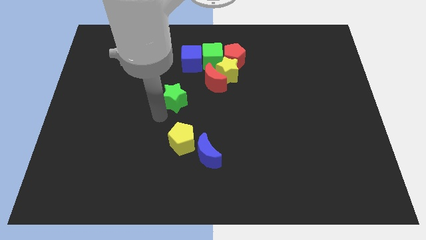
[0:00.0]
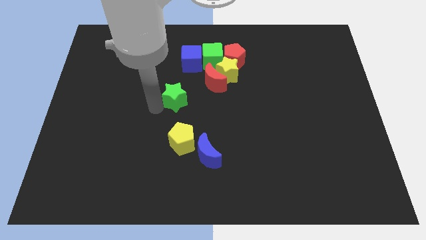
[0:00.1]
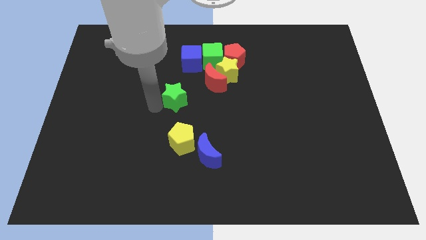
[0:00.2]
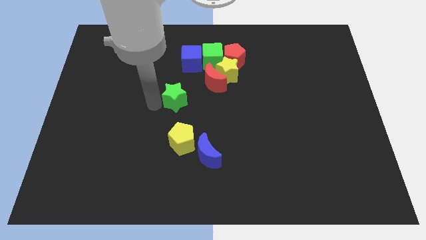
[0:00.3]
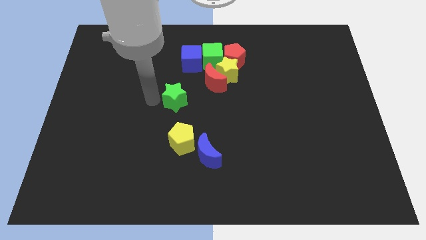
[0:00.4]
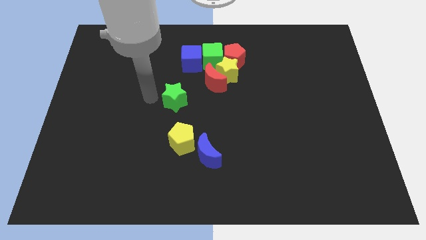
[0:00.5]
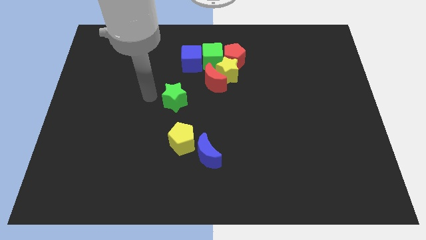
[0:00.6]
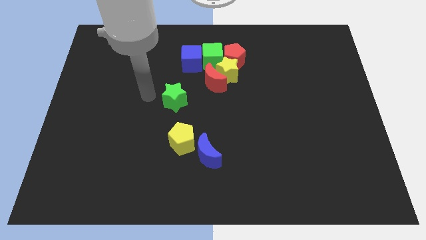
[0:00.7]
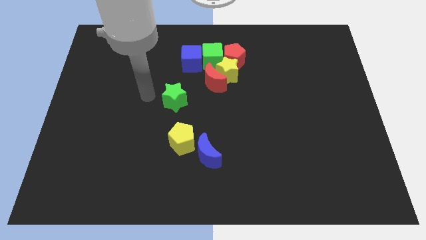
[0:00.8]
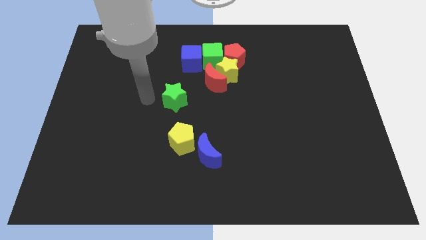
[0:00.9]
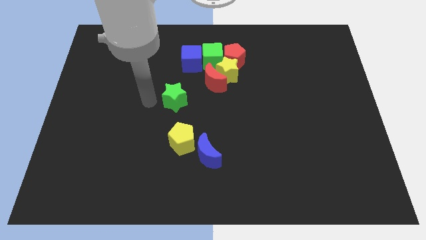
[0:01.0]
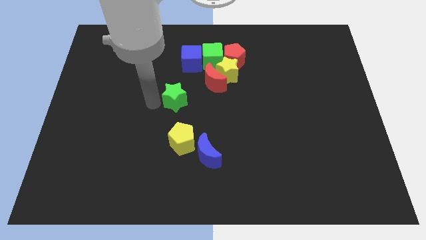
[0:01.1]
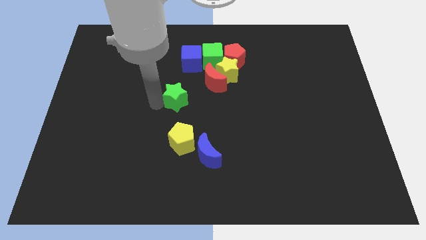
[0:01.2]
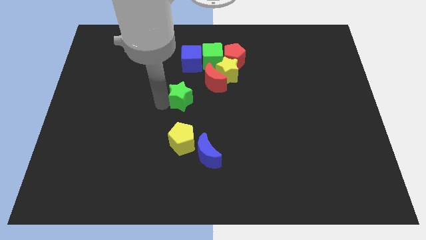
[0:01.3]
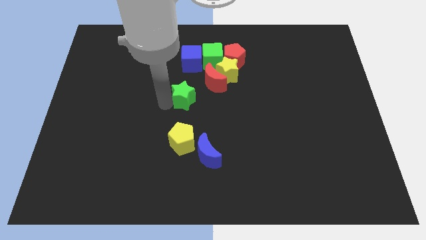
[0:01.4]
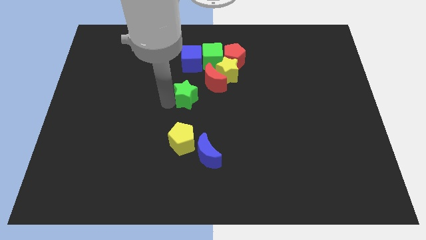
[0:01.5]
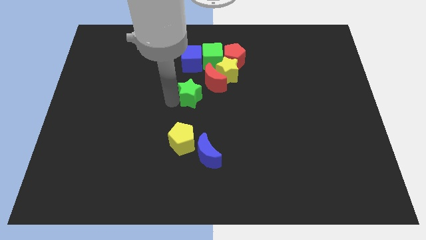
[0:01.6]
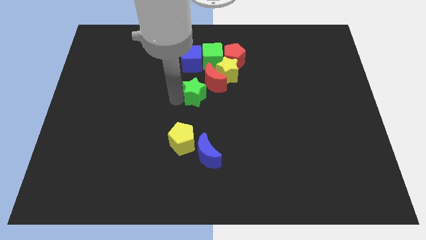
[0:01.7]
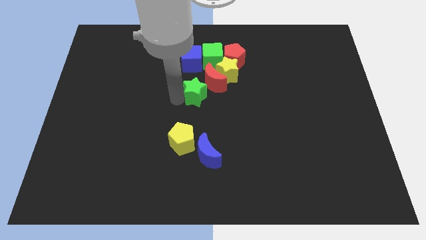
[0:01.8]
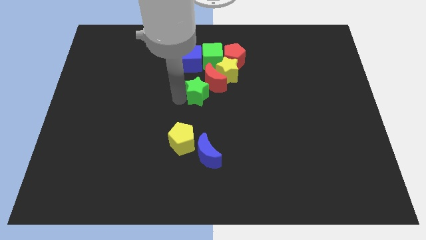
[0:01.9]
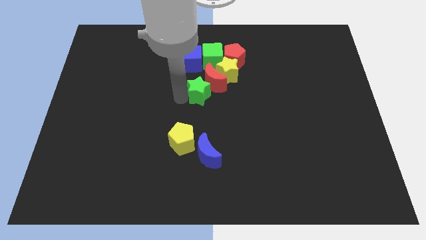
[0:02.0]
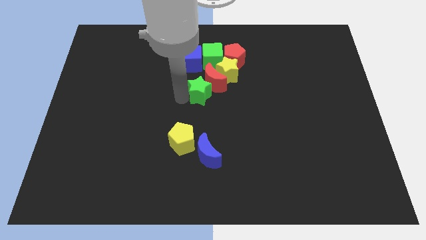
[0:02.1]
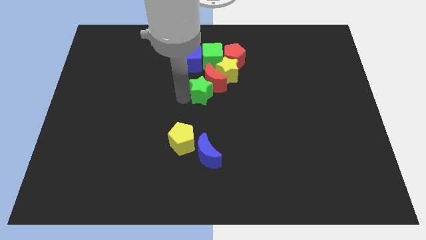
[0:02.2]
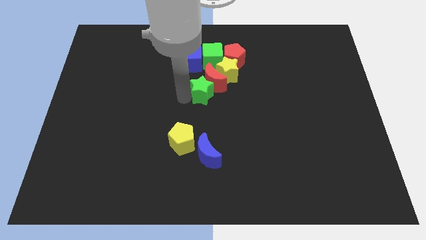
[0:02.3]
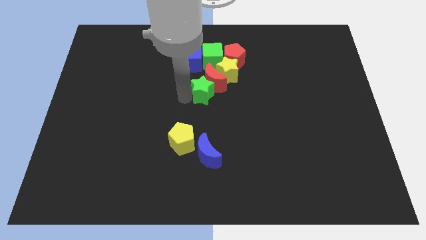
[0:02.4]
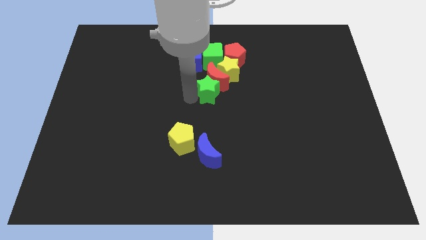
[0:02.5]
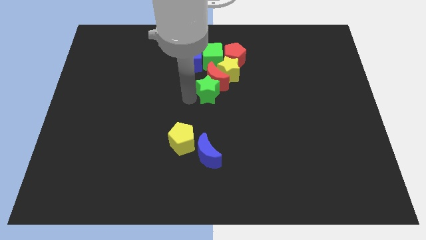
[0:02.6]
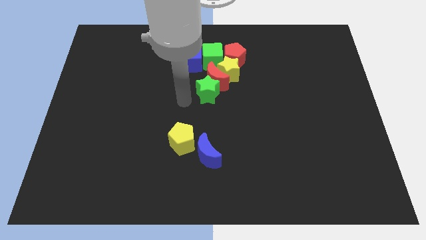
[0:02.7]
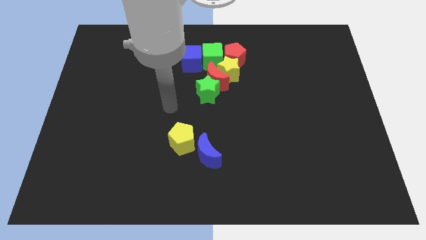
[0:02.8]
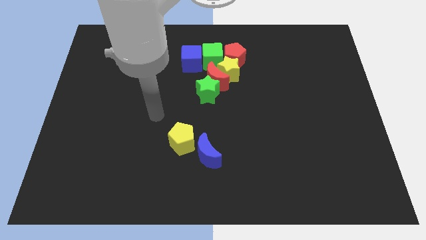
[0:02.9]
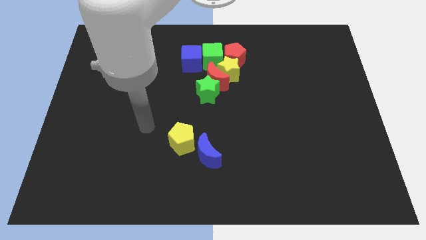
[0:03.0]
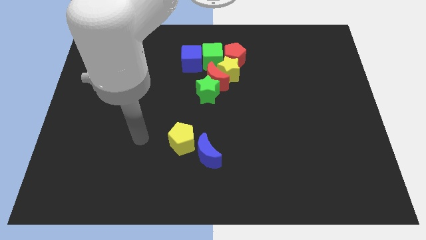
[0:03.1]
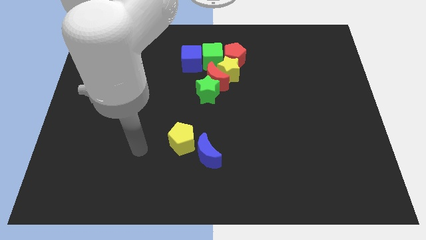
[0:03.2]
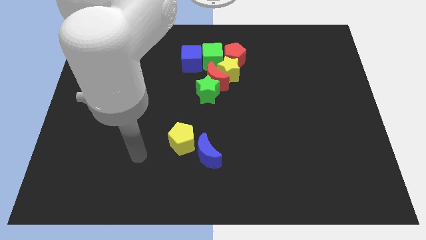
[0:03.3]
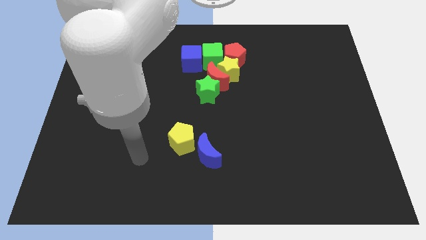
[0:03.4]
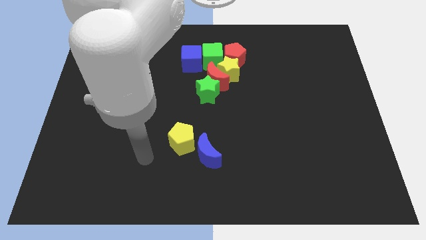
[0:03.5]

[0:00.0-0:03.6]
push the green star into the red moon

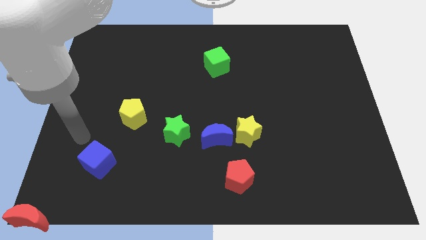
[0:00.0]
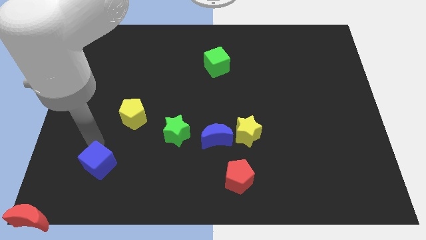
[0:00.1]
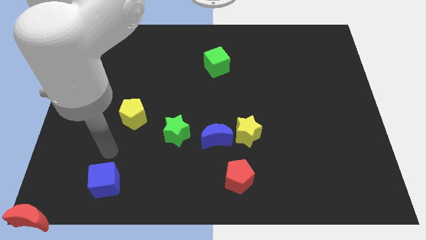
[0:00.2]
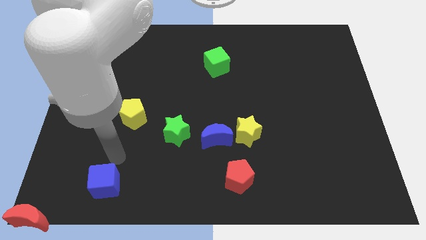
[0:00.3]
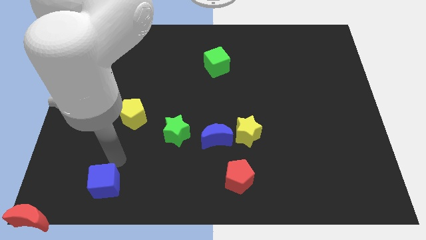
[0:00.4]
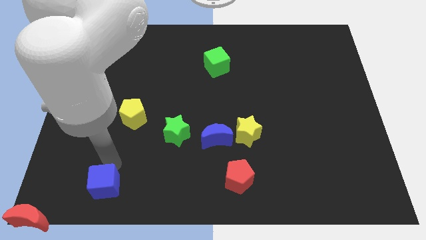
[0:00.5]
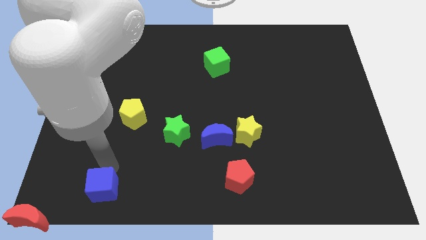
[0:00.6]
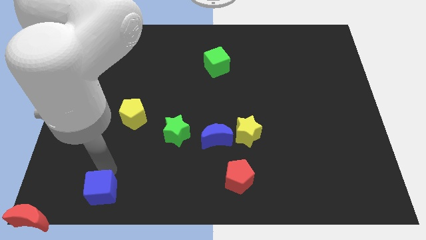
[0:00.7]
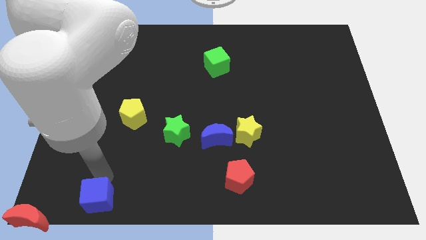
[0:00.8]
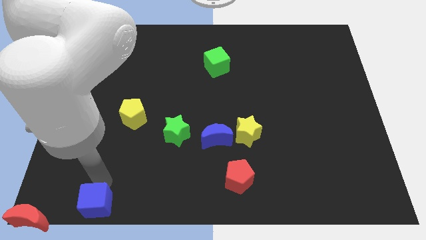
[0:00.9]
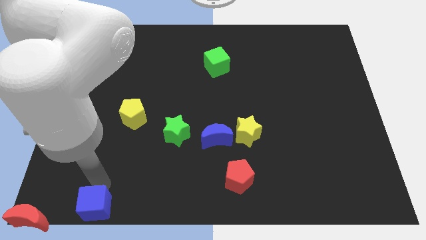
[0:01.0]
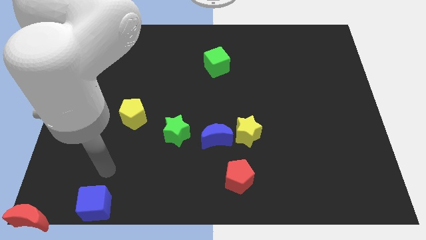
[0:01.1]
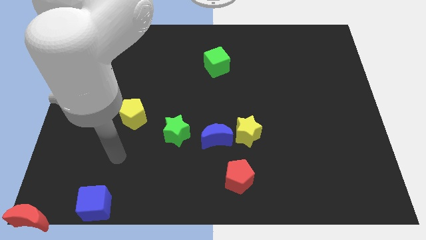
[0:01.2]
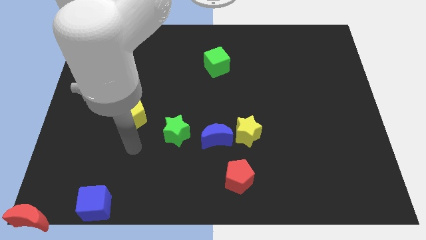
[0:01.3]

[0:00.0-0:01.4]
slide the blue cube to the right side of the red crescent

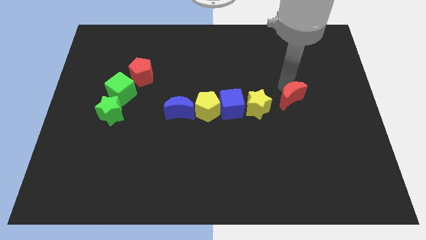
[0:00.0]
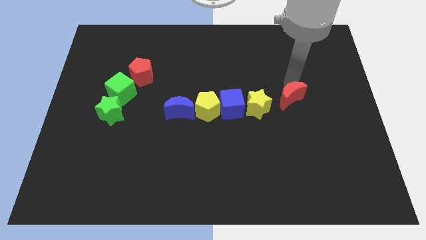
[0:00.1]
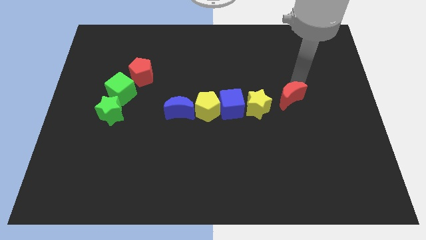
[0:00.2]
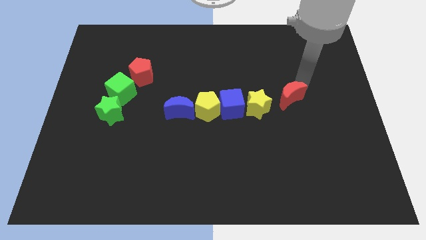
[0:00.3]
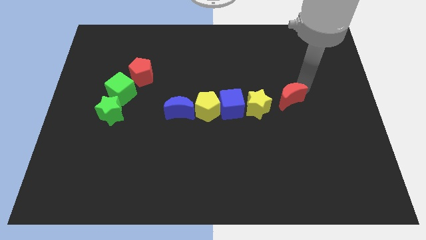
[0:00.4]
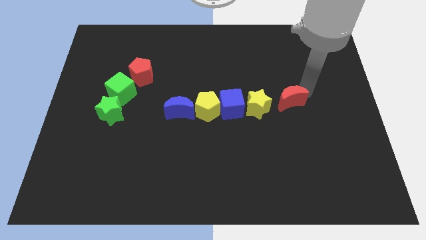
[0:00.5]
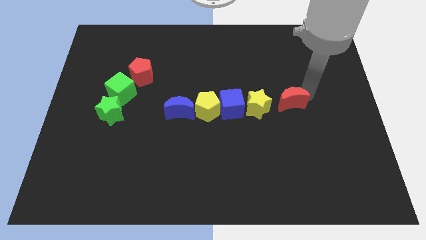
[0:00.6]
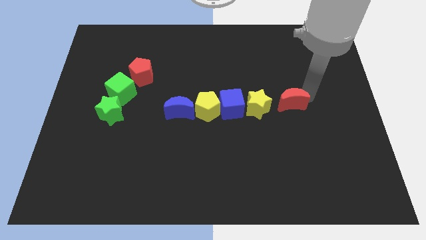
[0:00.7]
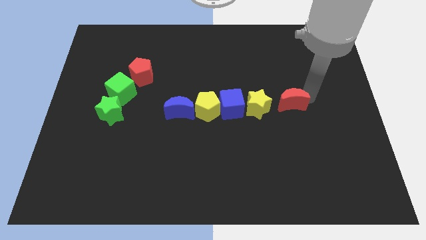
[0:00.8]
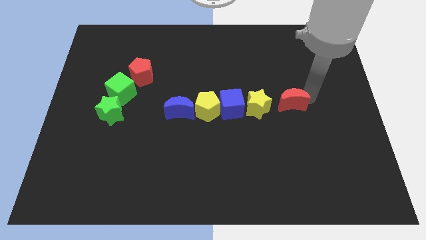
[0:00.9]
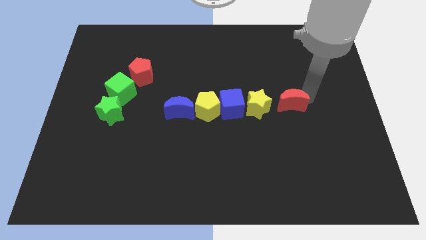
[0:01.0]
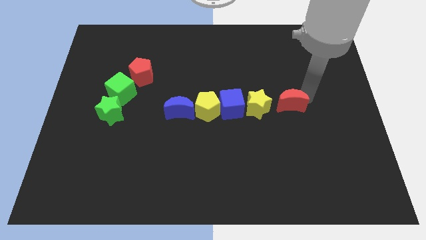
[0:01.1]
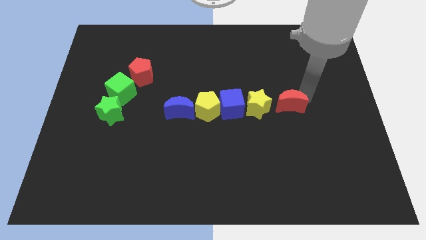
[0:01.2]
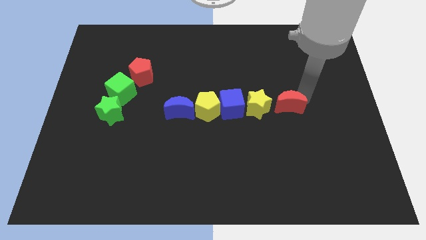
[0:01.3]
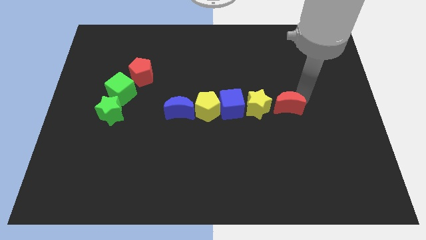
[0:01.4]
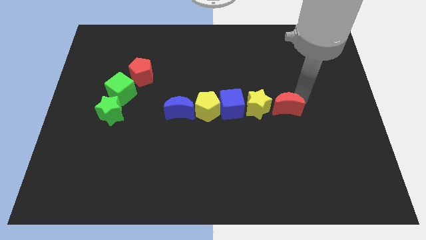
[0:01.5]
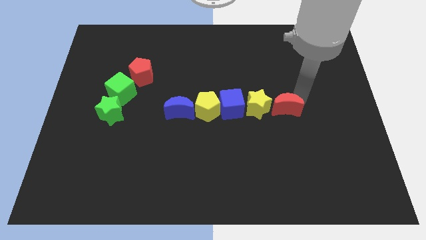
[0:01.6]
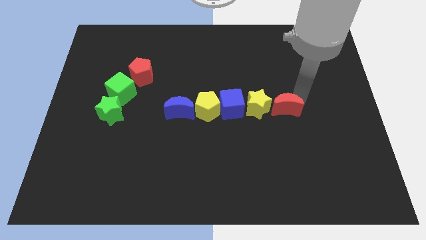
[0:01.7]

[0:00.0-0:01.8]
place the red crescent right to the yellow star

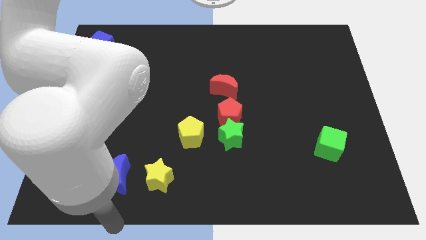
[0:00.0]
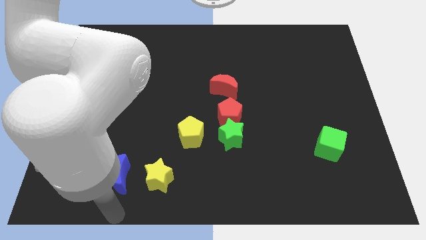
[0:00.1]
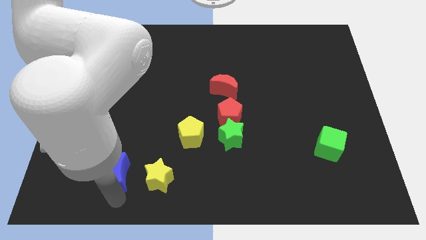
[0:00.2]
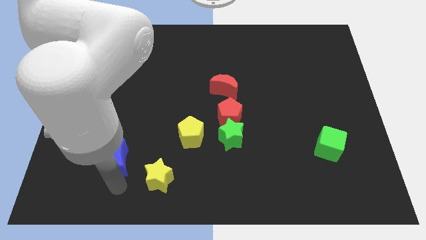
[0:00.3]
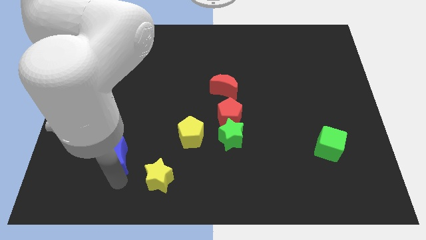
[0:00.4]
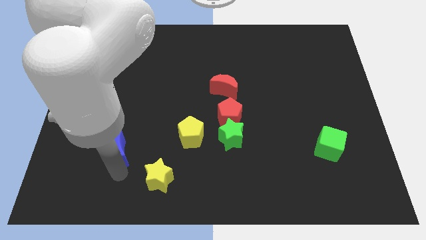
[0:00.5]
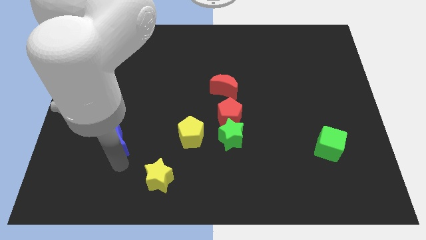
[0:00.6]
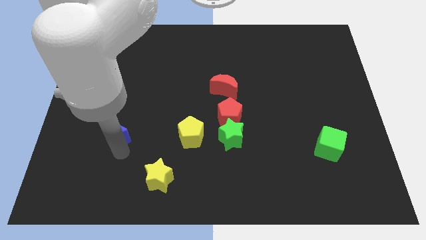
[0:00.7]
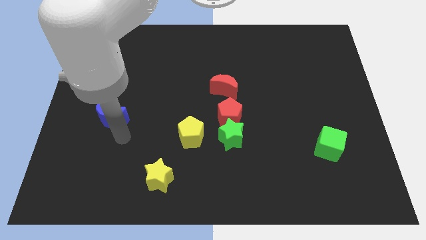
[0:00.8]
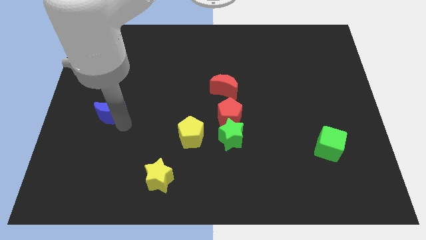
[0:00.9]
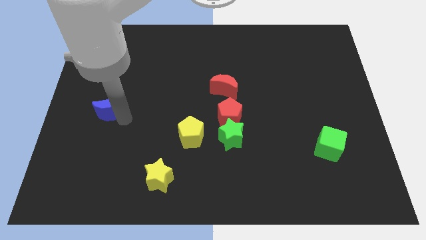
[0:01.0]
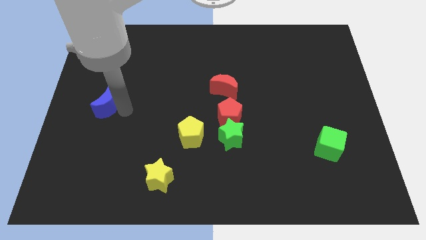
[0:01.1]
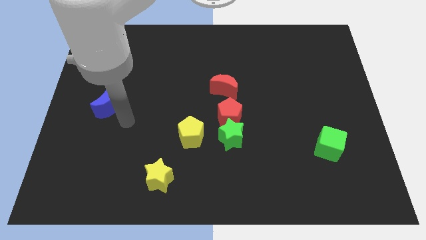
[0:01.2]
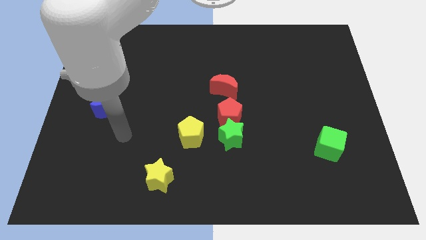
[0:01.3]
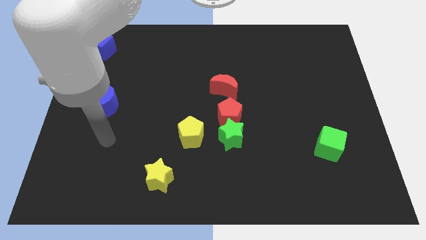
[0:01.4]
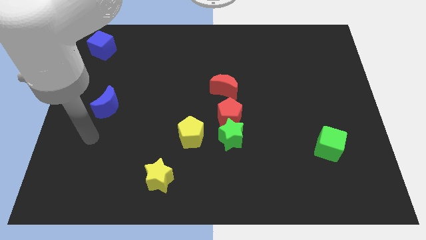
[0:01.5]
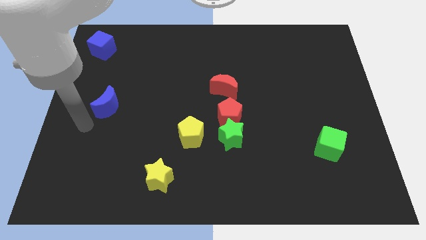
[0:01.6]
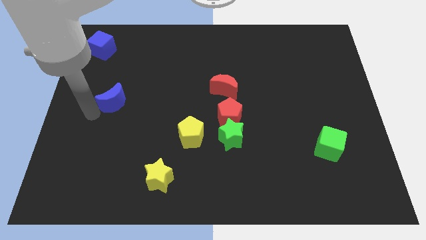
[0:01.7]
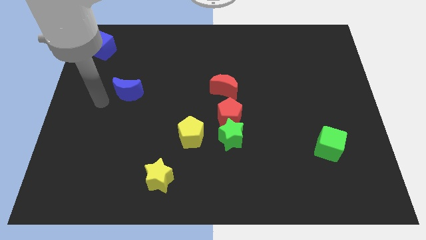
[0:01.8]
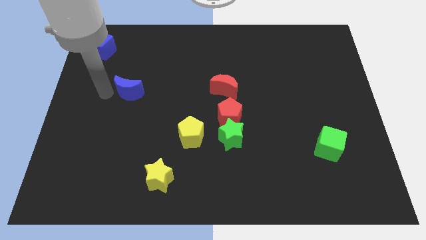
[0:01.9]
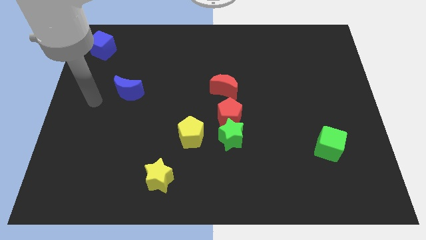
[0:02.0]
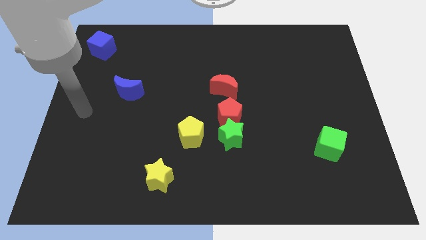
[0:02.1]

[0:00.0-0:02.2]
move the blue moon towards the top side of the board
